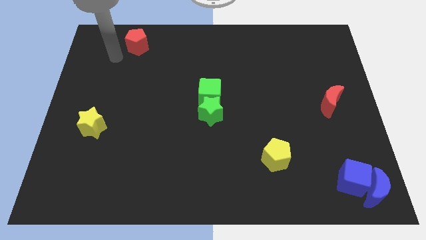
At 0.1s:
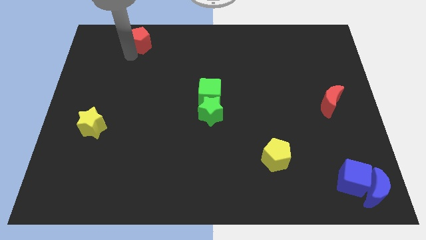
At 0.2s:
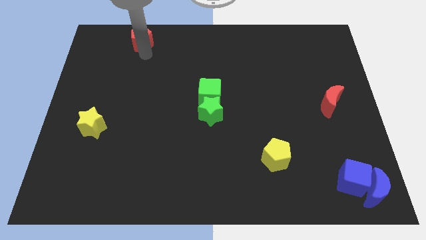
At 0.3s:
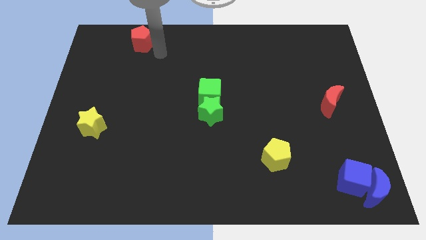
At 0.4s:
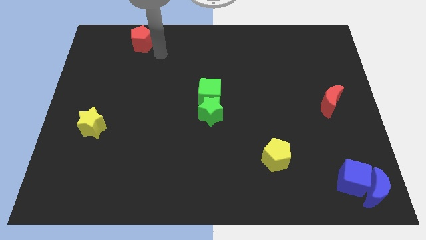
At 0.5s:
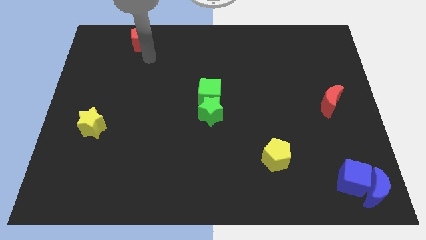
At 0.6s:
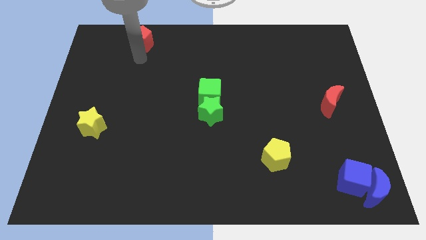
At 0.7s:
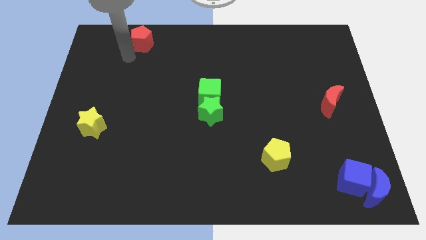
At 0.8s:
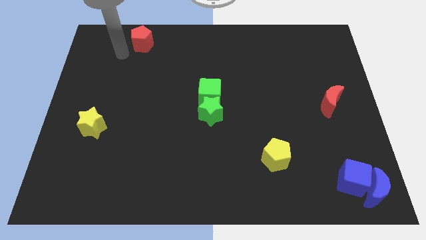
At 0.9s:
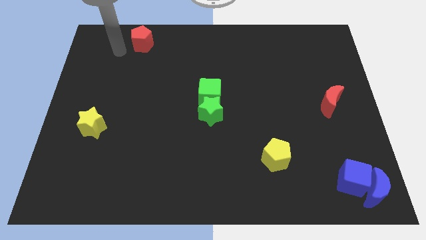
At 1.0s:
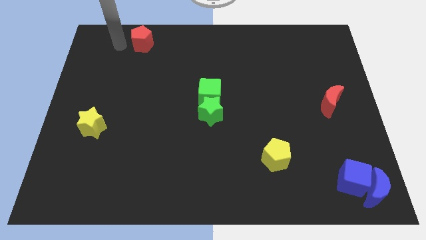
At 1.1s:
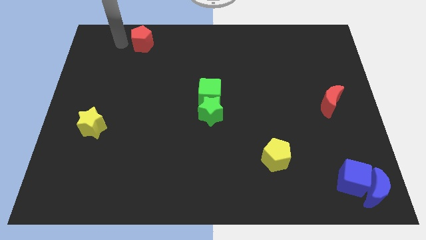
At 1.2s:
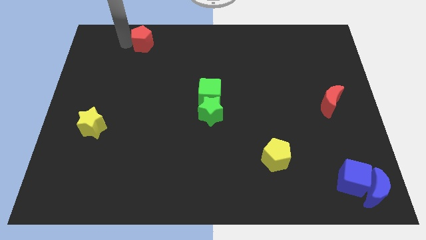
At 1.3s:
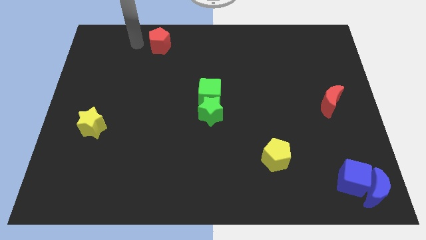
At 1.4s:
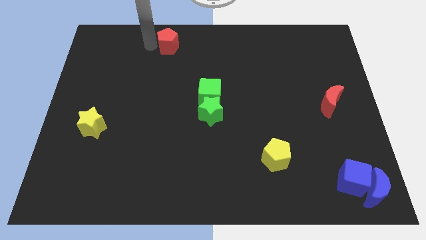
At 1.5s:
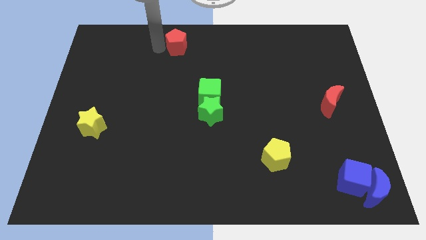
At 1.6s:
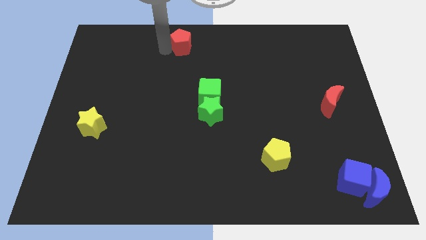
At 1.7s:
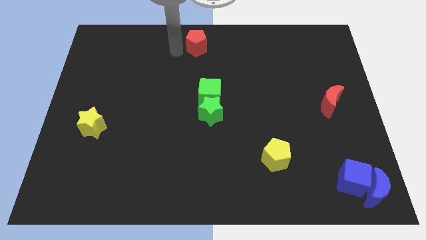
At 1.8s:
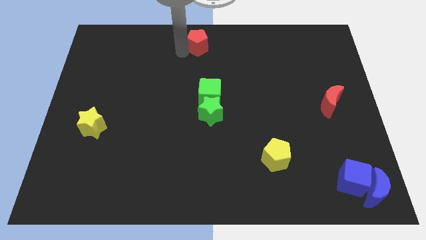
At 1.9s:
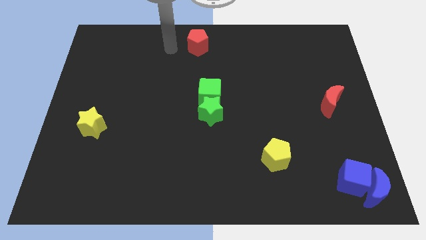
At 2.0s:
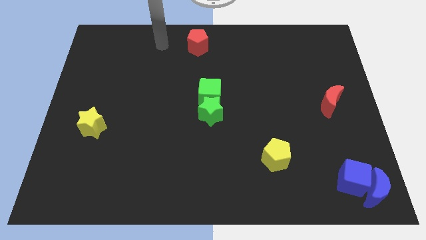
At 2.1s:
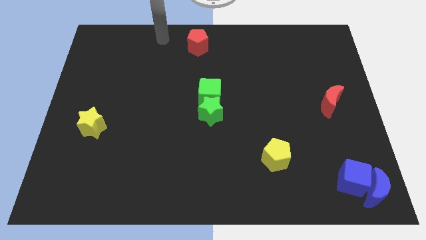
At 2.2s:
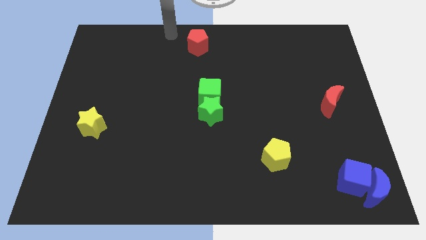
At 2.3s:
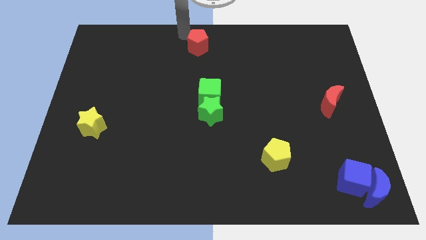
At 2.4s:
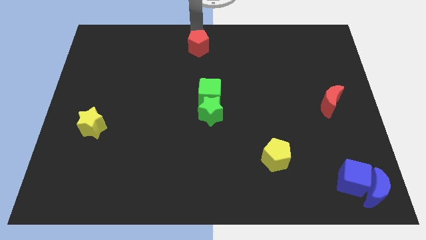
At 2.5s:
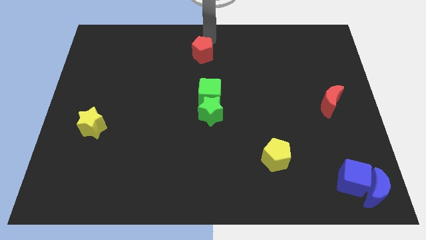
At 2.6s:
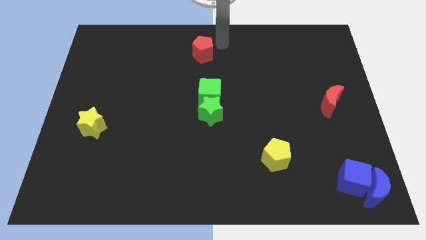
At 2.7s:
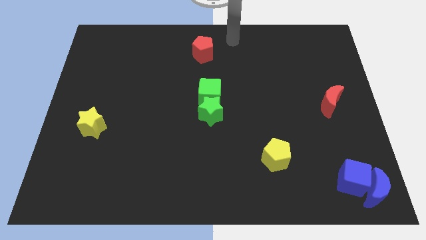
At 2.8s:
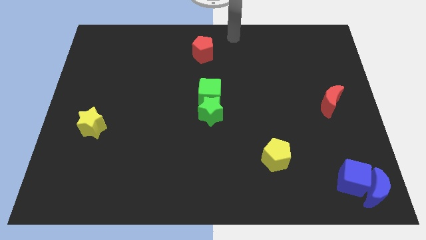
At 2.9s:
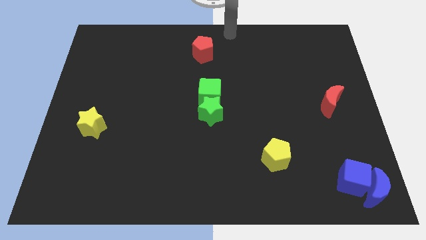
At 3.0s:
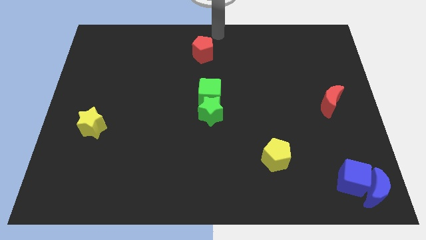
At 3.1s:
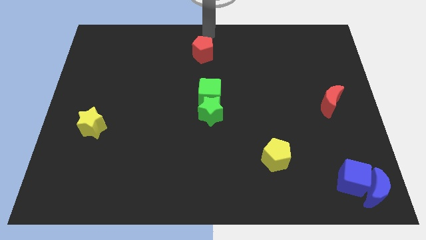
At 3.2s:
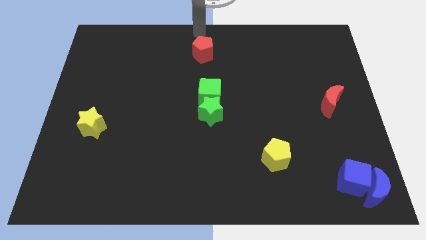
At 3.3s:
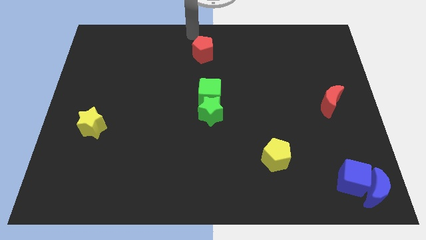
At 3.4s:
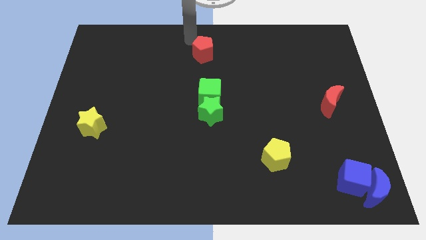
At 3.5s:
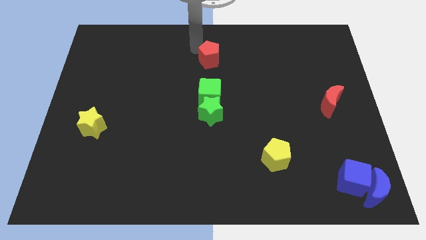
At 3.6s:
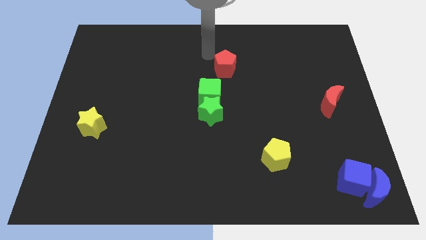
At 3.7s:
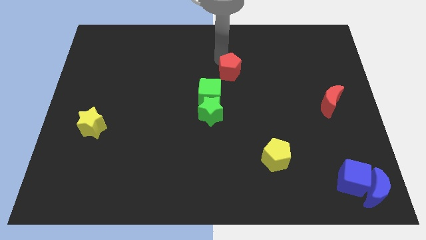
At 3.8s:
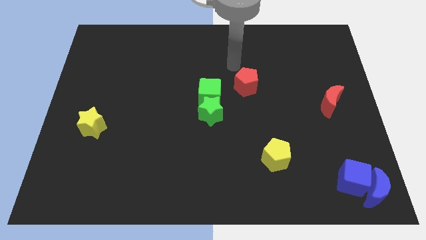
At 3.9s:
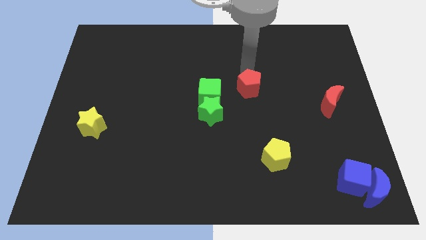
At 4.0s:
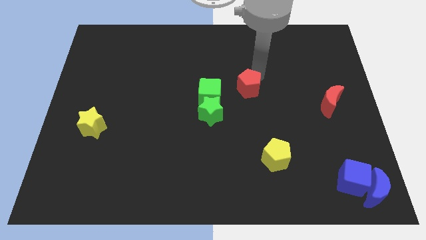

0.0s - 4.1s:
move the red pentagon towards the green cube

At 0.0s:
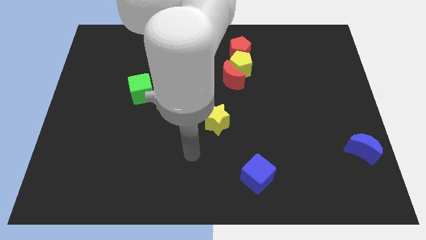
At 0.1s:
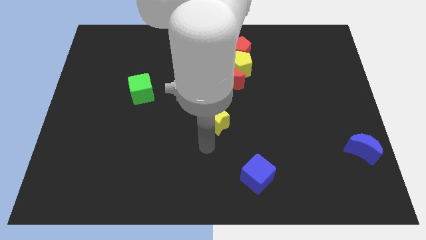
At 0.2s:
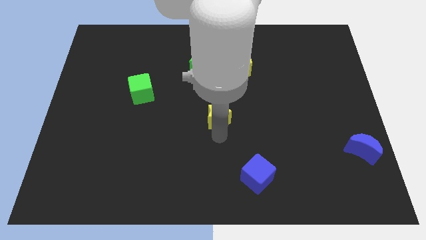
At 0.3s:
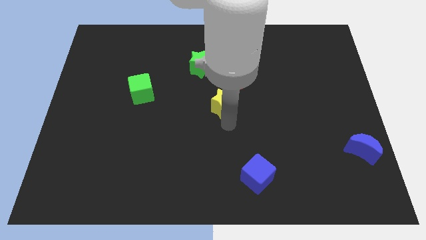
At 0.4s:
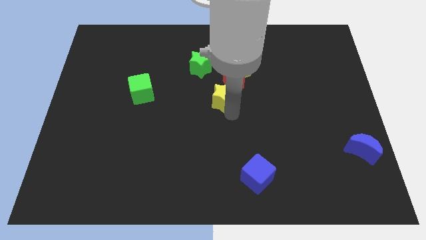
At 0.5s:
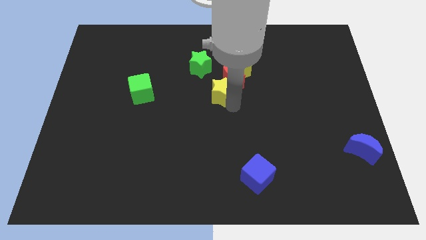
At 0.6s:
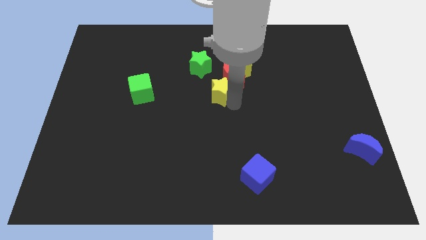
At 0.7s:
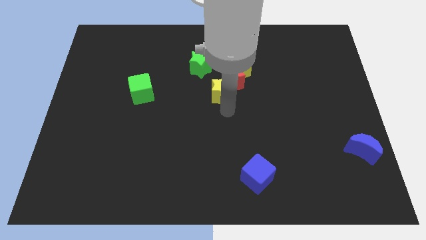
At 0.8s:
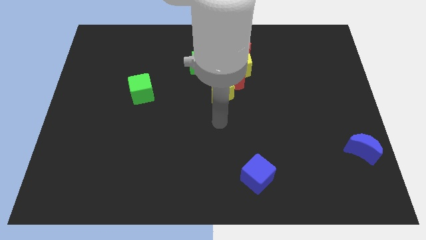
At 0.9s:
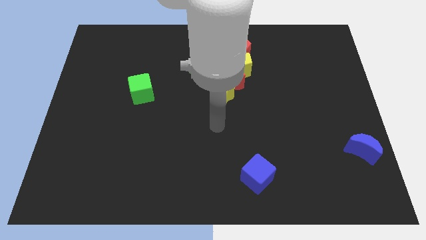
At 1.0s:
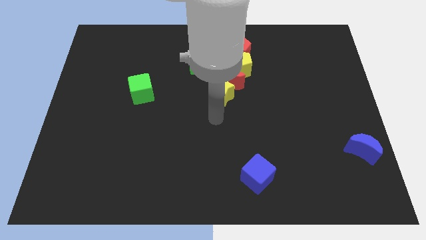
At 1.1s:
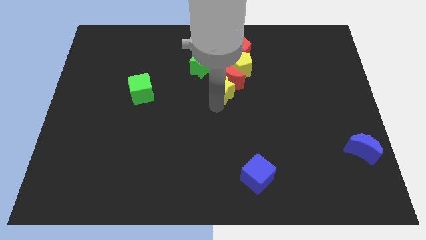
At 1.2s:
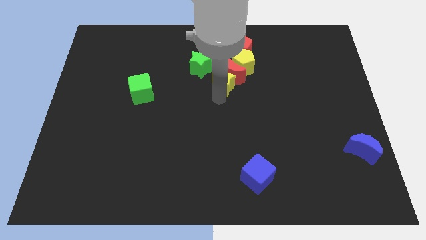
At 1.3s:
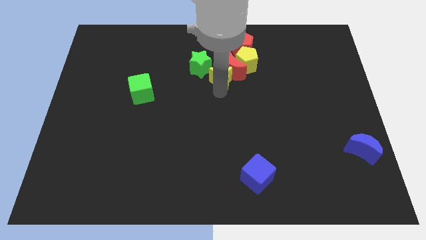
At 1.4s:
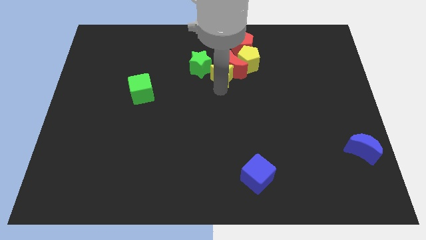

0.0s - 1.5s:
move the yellow star towards the red crescent

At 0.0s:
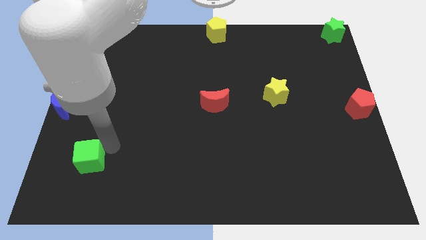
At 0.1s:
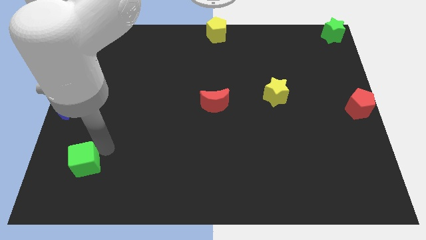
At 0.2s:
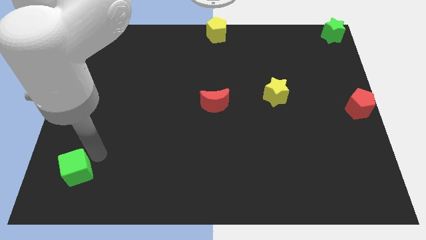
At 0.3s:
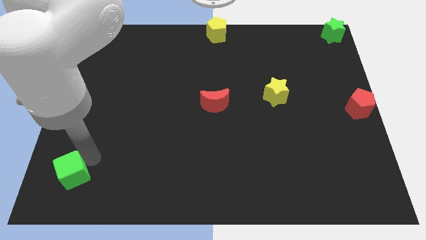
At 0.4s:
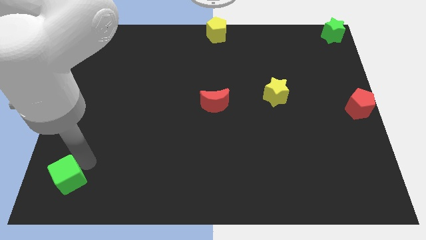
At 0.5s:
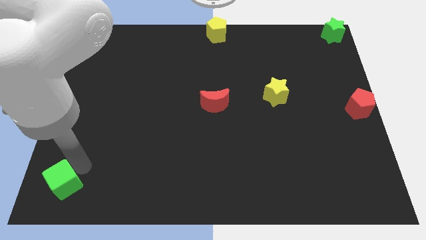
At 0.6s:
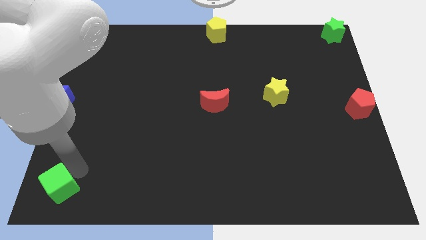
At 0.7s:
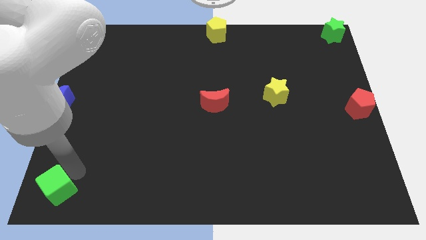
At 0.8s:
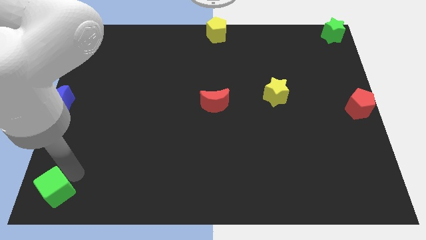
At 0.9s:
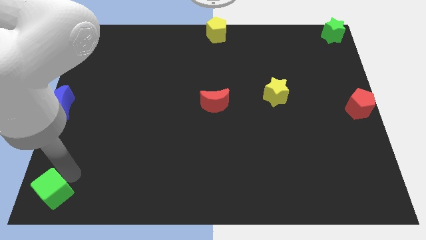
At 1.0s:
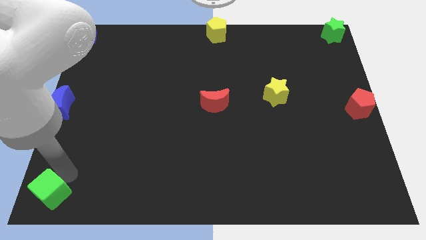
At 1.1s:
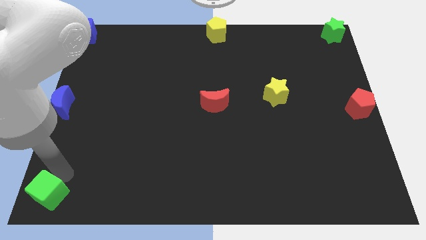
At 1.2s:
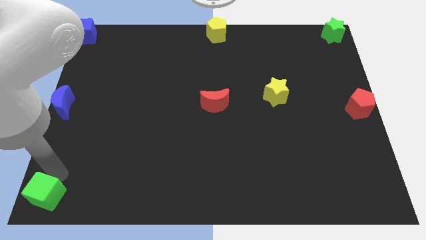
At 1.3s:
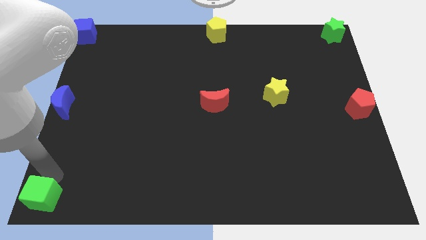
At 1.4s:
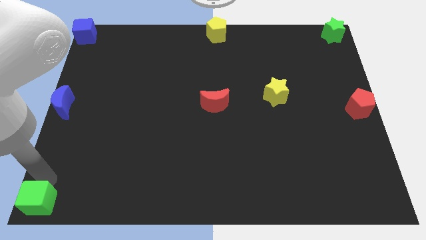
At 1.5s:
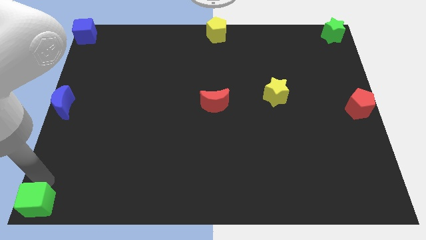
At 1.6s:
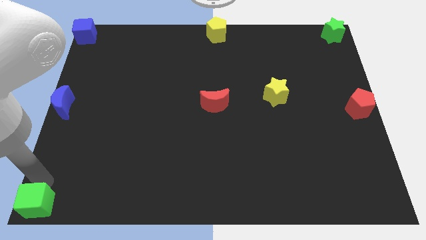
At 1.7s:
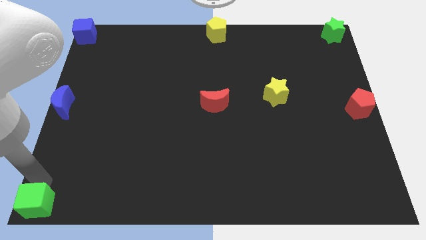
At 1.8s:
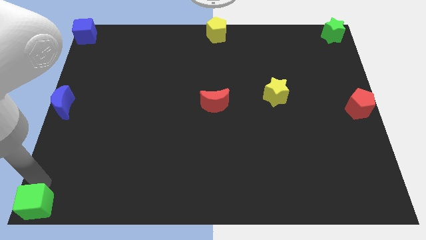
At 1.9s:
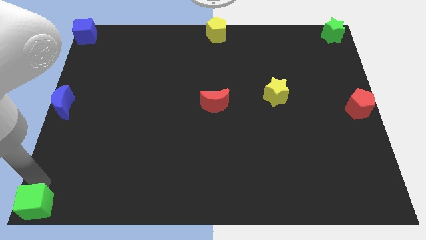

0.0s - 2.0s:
move the green cube to the bottom left to the board

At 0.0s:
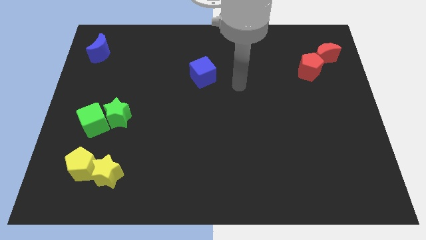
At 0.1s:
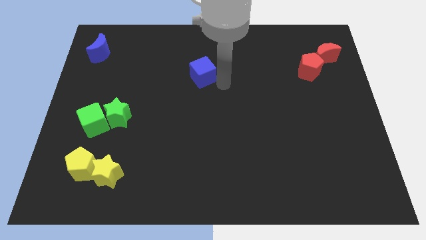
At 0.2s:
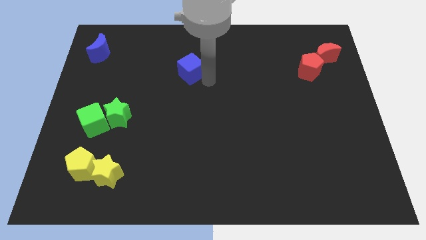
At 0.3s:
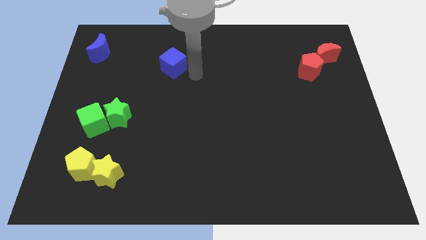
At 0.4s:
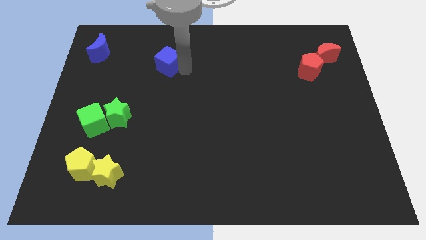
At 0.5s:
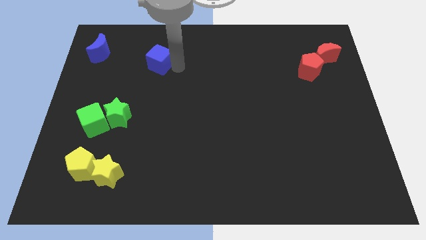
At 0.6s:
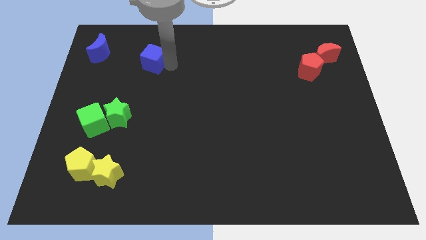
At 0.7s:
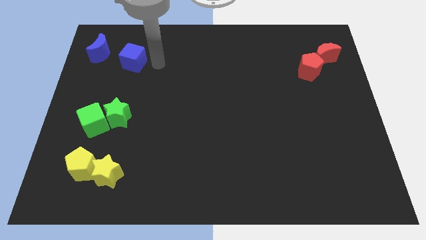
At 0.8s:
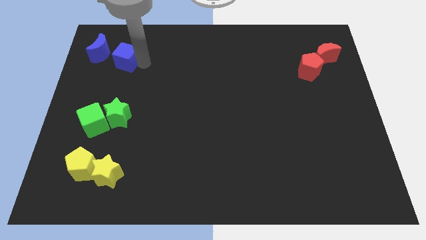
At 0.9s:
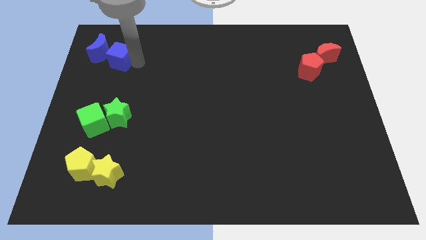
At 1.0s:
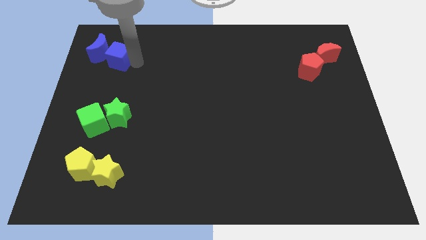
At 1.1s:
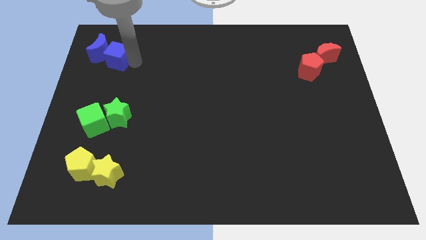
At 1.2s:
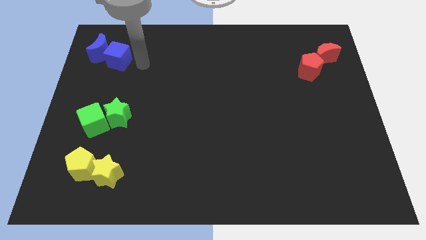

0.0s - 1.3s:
move blue cube adjacent to blue moon

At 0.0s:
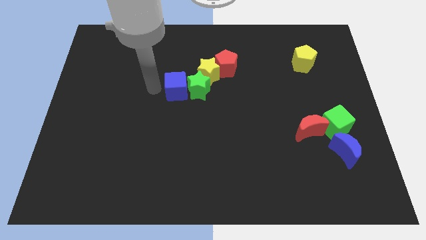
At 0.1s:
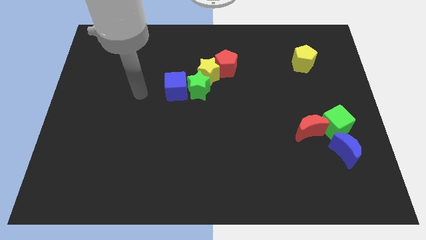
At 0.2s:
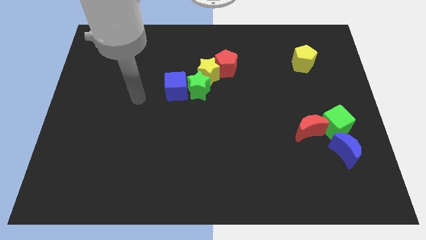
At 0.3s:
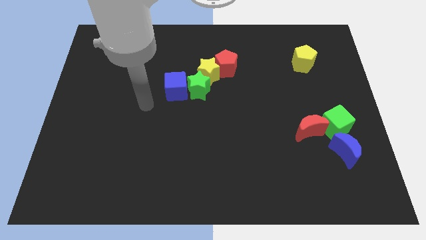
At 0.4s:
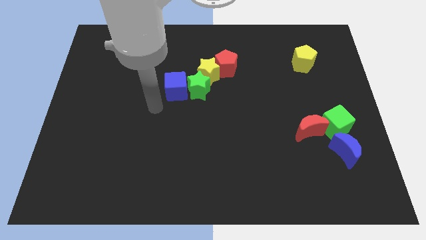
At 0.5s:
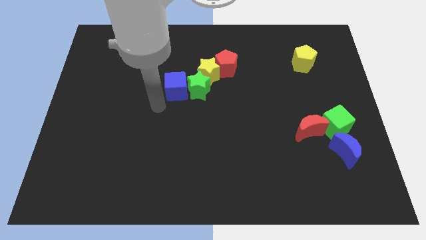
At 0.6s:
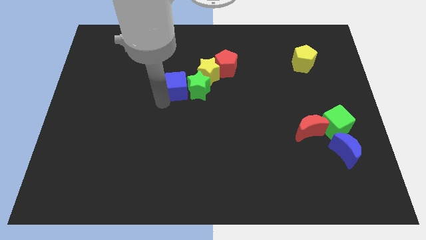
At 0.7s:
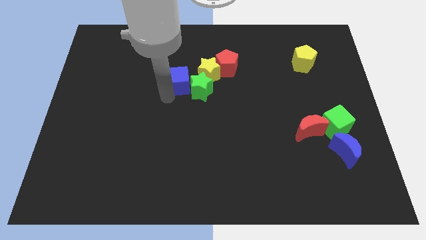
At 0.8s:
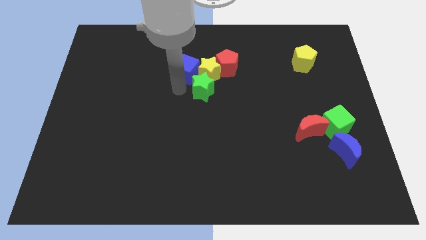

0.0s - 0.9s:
place blue cube to the left of yellow star
